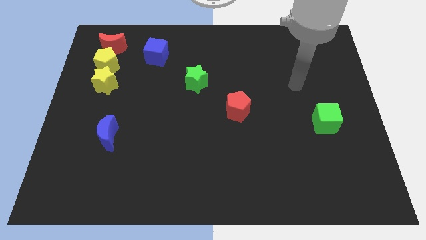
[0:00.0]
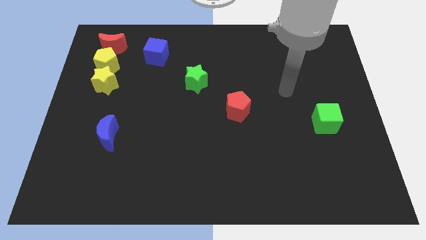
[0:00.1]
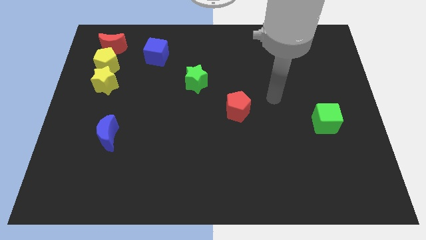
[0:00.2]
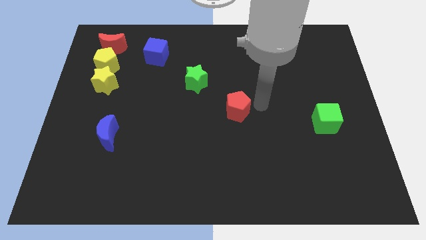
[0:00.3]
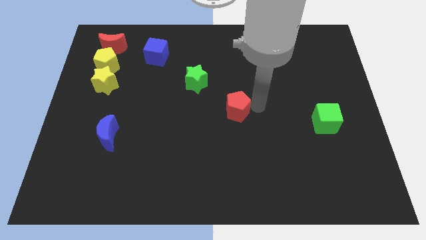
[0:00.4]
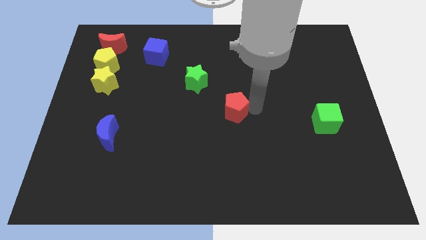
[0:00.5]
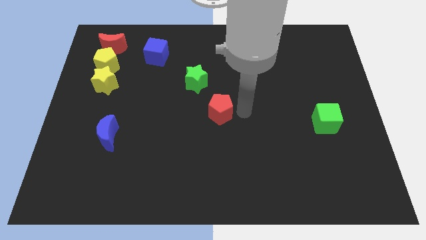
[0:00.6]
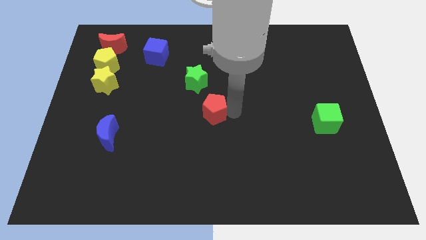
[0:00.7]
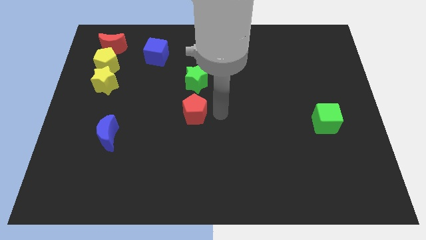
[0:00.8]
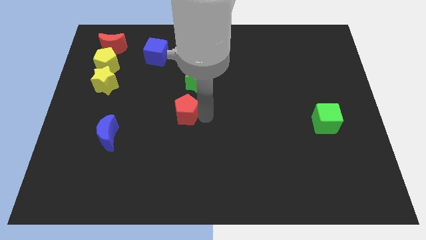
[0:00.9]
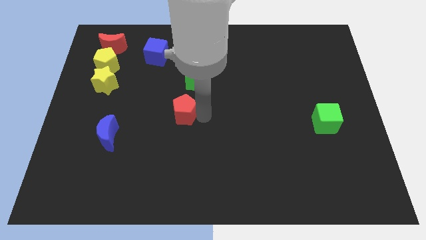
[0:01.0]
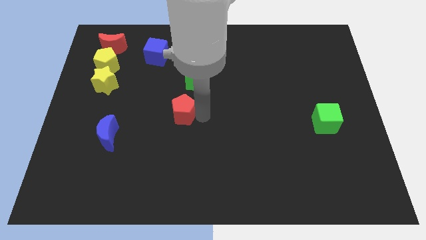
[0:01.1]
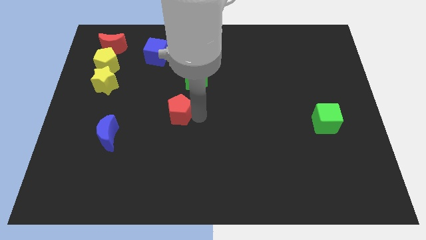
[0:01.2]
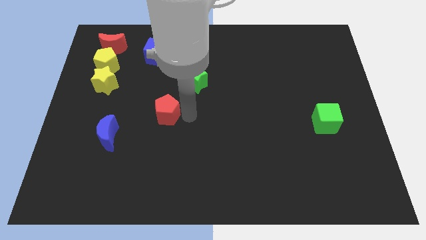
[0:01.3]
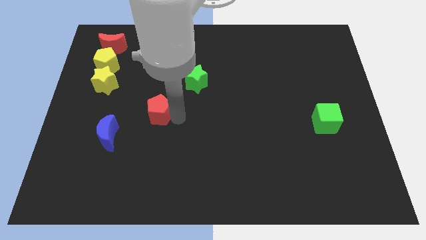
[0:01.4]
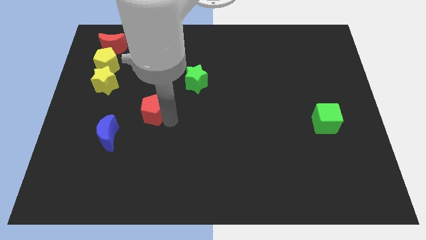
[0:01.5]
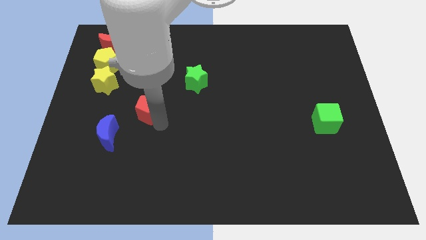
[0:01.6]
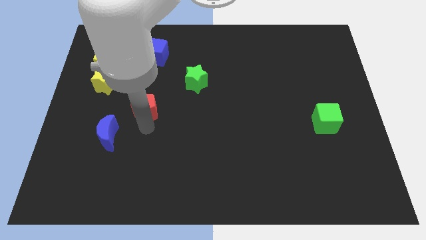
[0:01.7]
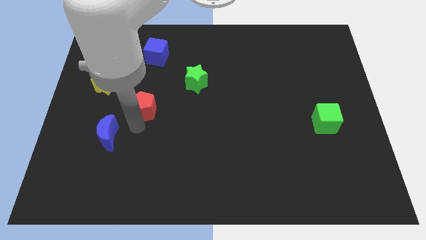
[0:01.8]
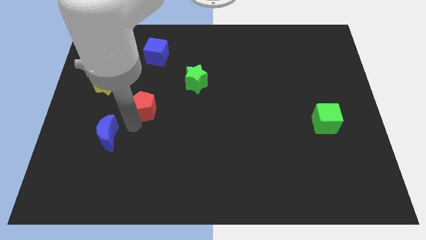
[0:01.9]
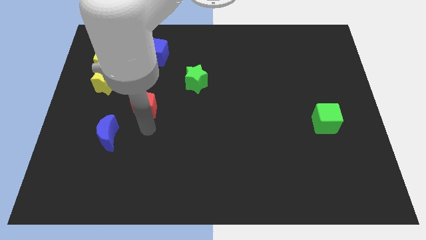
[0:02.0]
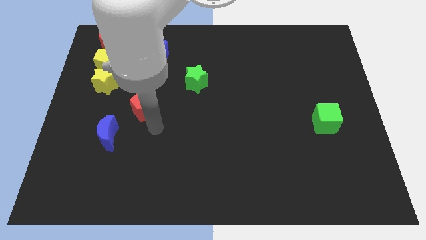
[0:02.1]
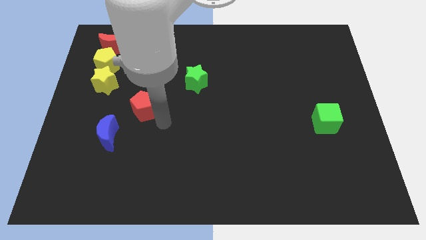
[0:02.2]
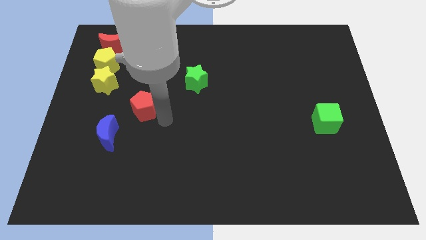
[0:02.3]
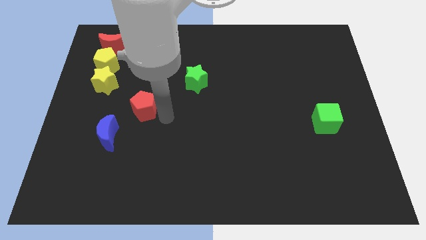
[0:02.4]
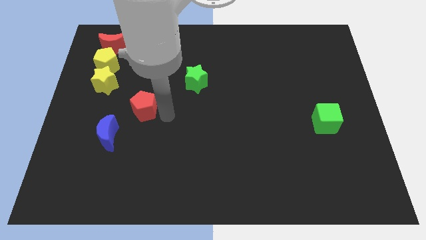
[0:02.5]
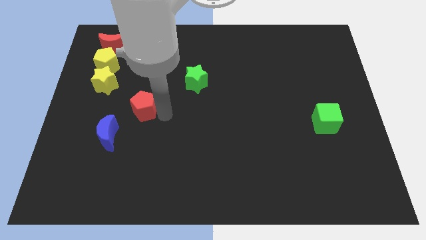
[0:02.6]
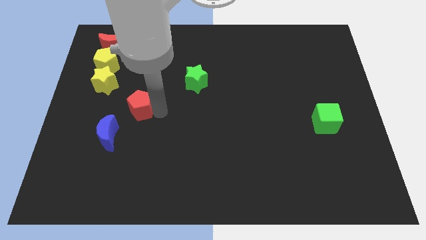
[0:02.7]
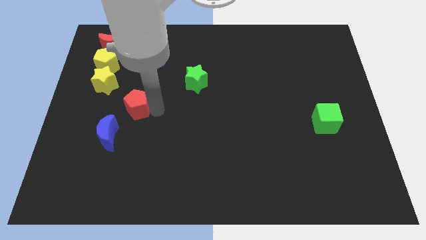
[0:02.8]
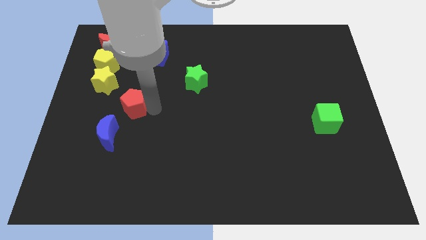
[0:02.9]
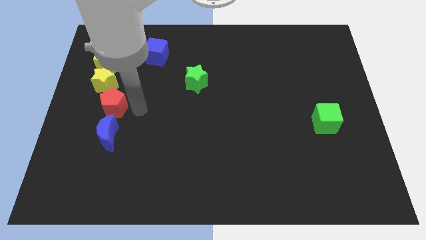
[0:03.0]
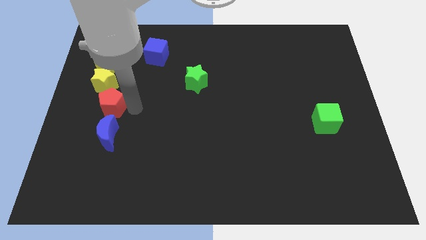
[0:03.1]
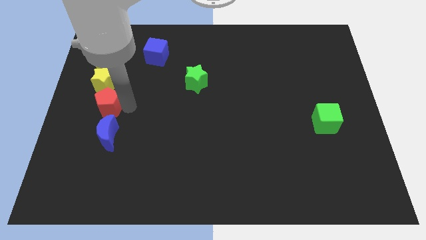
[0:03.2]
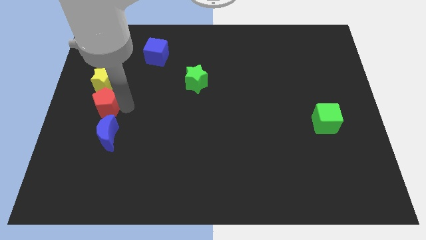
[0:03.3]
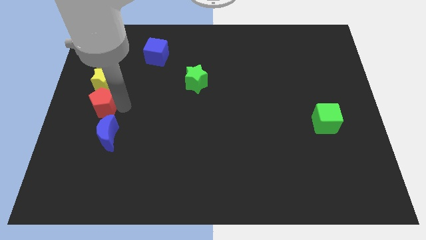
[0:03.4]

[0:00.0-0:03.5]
move the red pentagon below yellow star

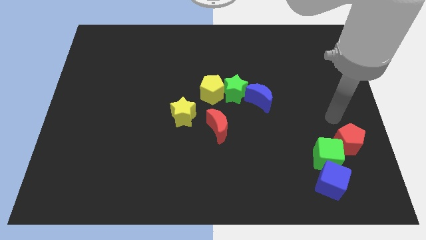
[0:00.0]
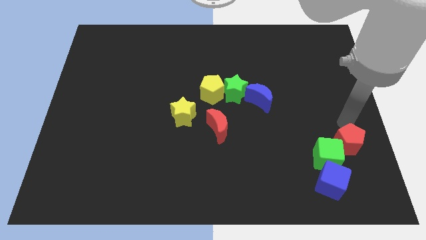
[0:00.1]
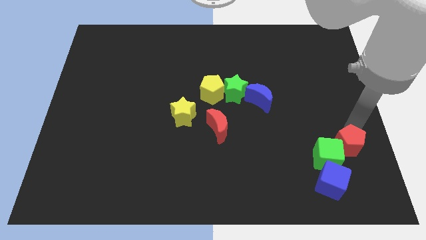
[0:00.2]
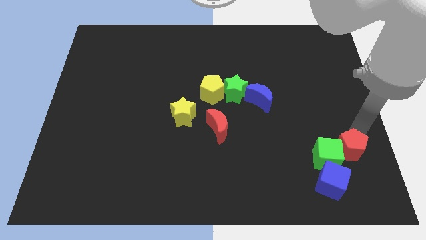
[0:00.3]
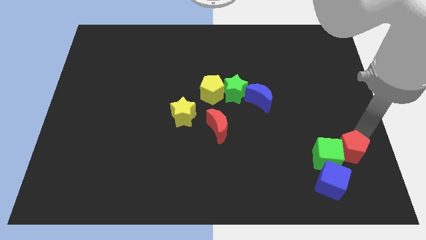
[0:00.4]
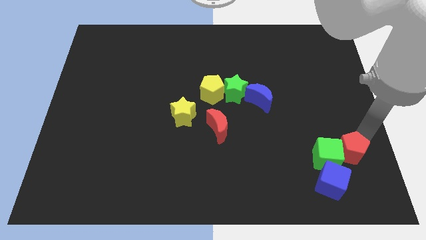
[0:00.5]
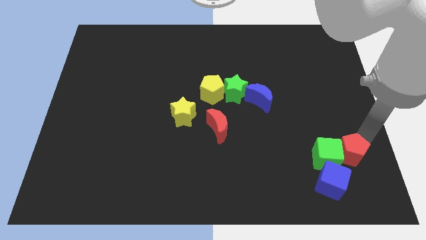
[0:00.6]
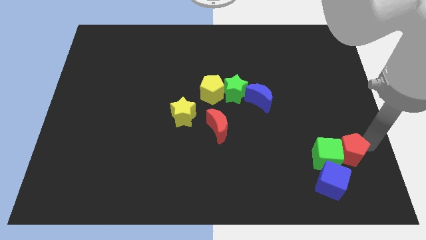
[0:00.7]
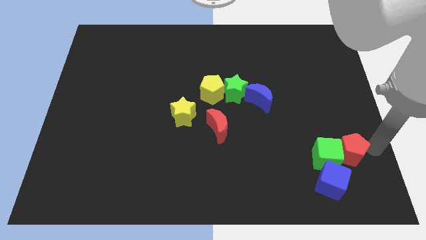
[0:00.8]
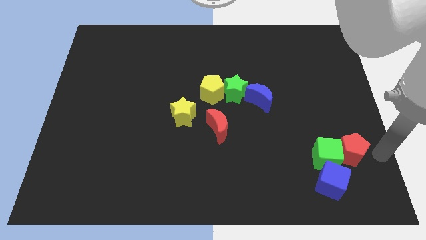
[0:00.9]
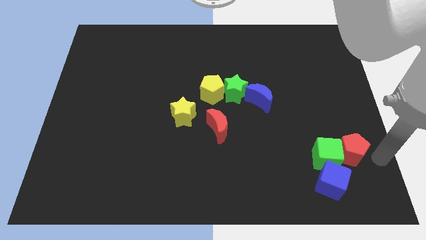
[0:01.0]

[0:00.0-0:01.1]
move the red pentagon to the right of the green cube

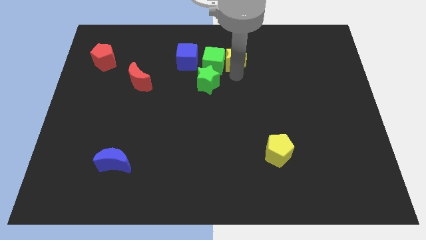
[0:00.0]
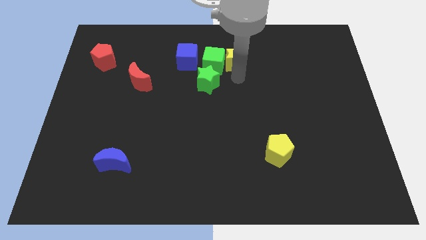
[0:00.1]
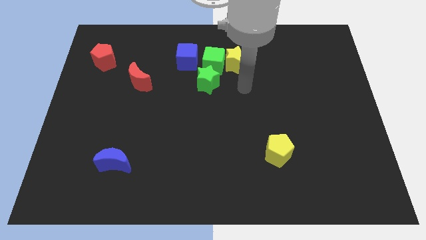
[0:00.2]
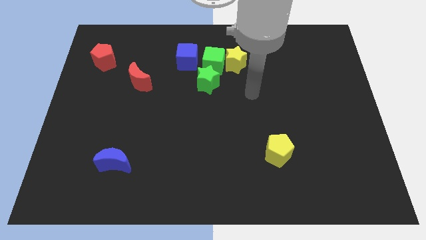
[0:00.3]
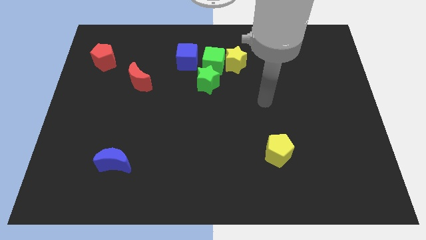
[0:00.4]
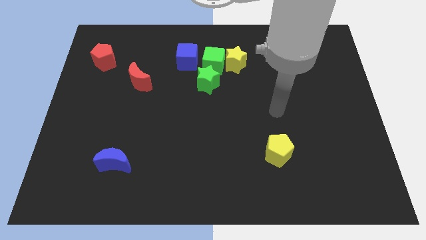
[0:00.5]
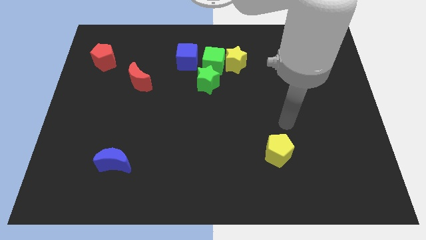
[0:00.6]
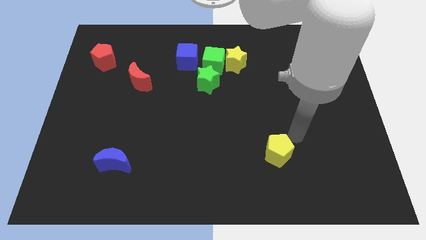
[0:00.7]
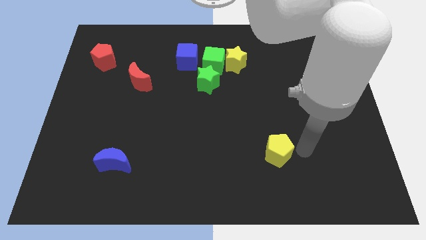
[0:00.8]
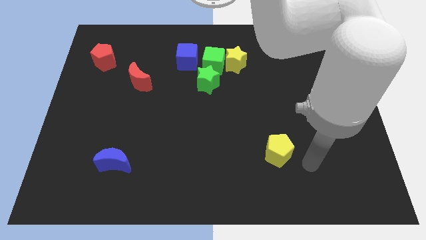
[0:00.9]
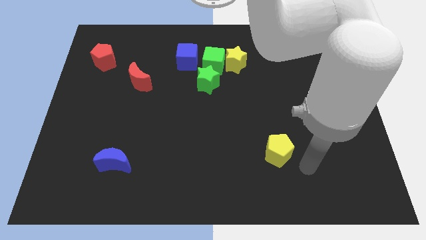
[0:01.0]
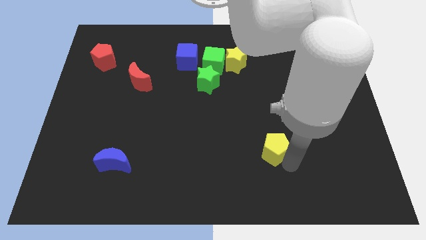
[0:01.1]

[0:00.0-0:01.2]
move your arm towards the bottom side of the board

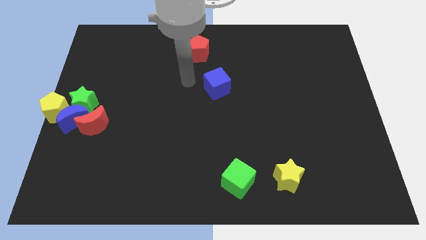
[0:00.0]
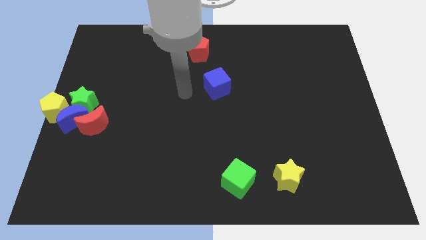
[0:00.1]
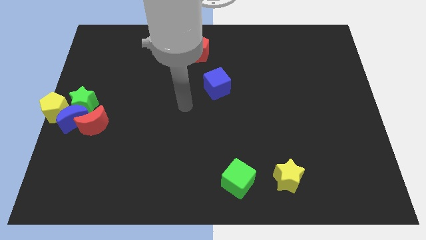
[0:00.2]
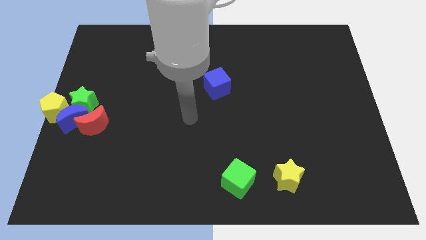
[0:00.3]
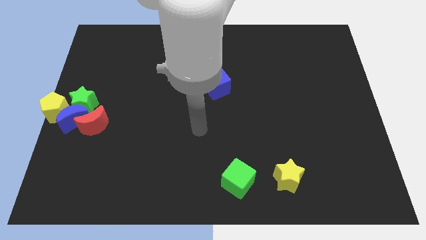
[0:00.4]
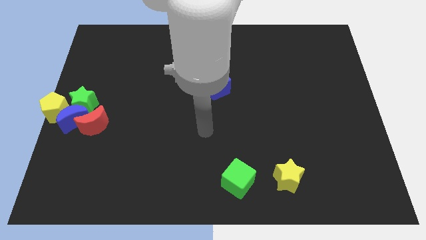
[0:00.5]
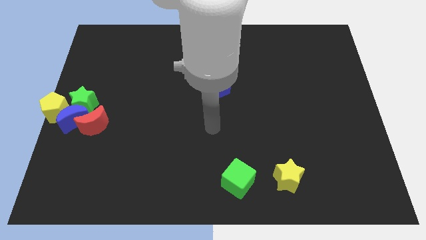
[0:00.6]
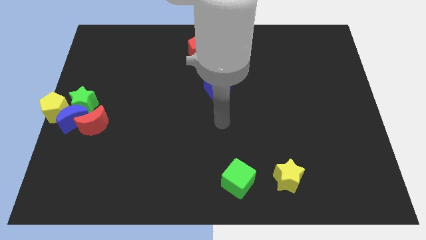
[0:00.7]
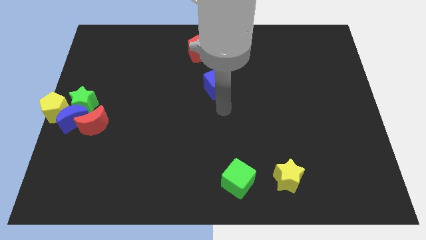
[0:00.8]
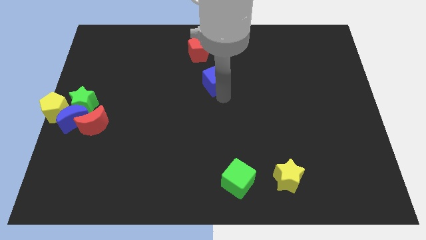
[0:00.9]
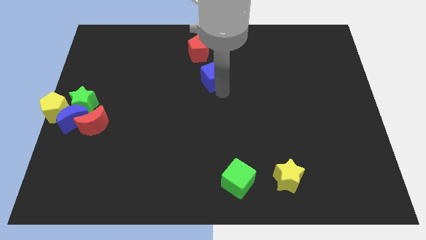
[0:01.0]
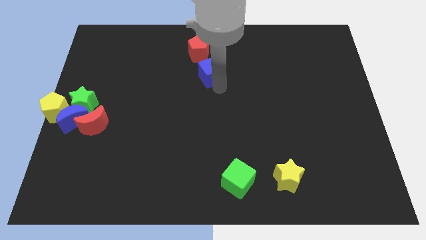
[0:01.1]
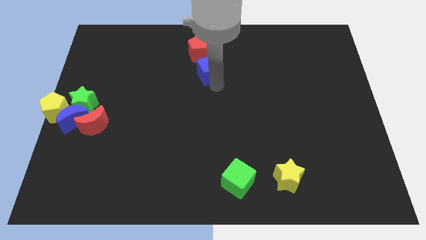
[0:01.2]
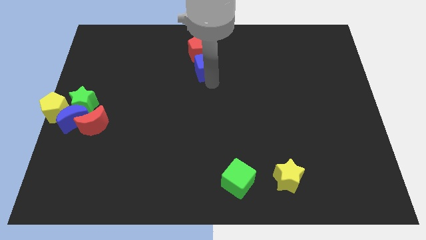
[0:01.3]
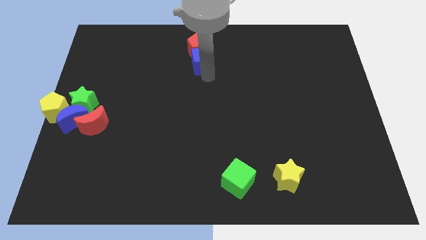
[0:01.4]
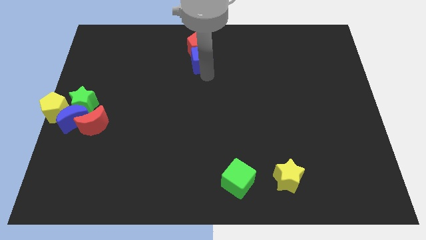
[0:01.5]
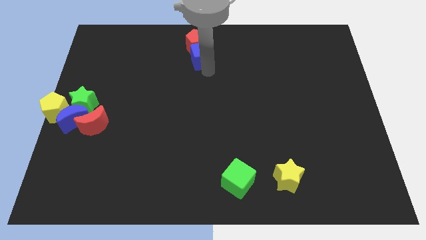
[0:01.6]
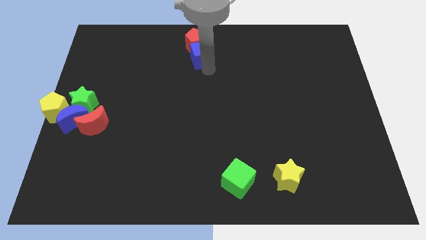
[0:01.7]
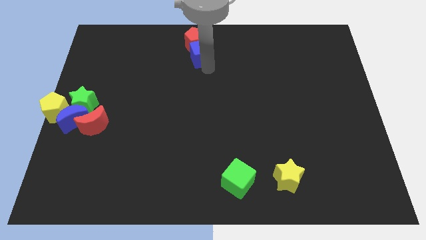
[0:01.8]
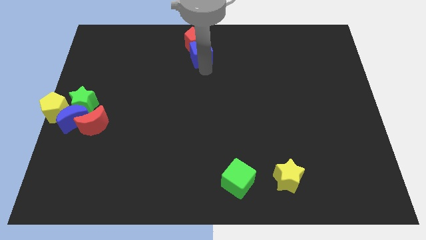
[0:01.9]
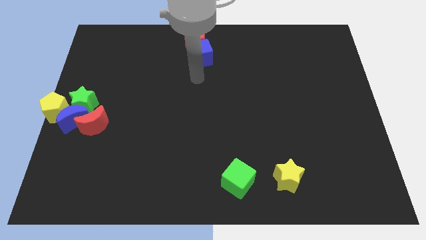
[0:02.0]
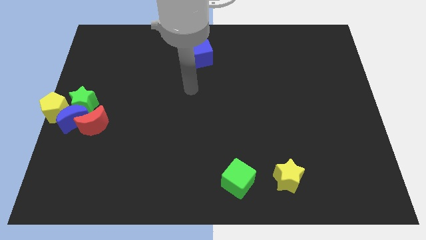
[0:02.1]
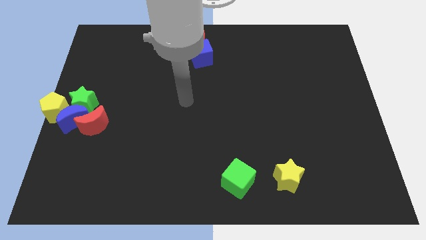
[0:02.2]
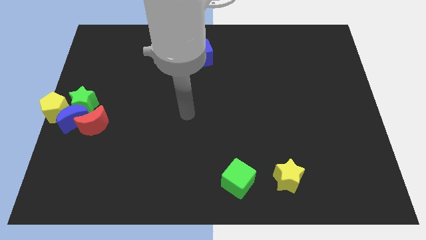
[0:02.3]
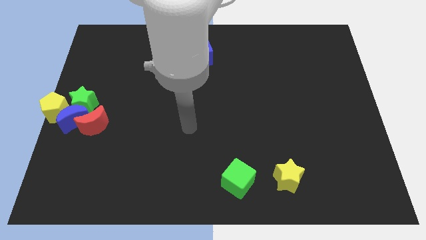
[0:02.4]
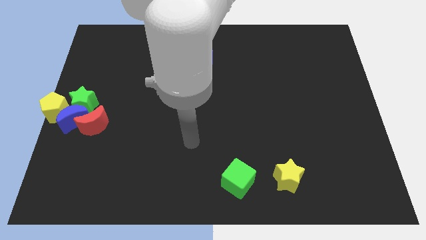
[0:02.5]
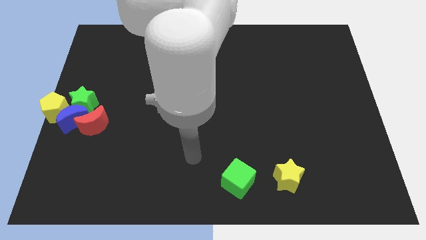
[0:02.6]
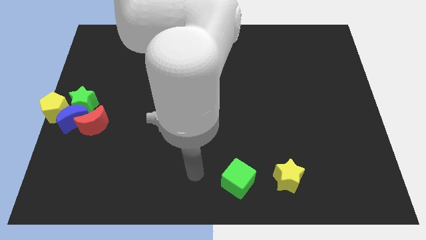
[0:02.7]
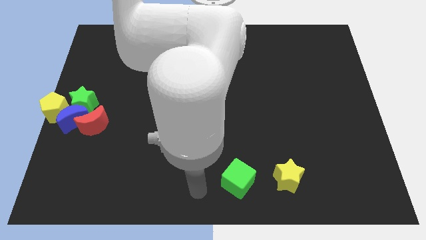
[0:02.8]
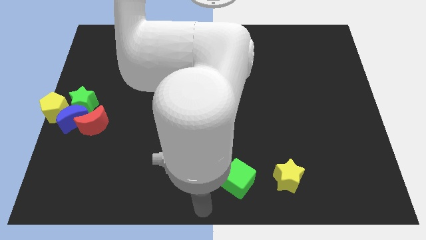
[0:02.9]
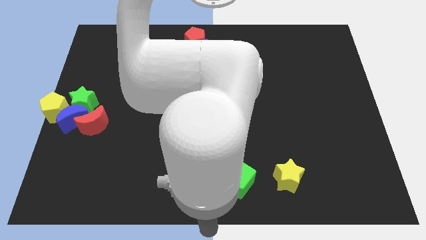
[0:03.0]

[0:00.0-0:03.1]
push blue cube into red pentagon

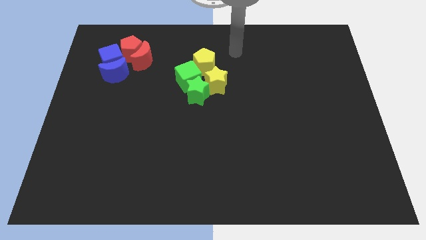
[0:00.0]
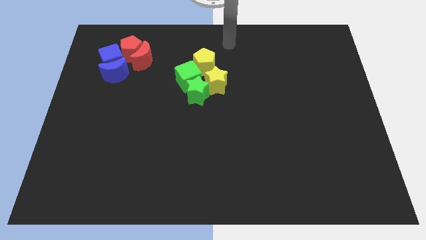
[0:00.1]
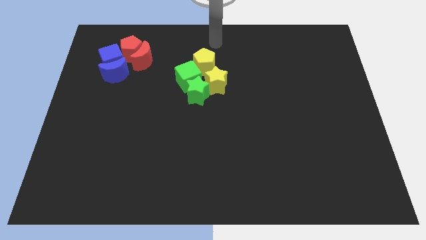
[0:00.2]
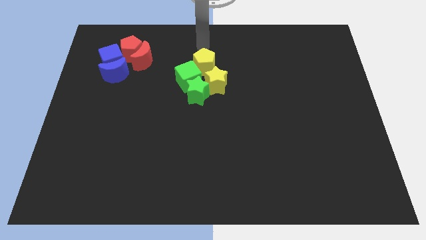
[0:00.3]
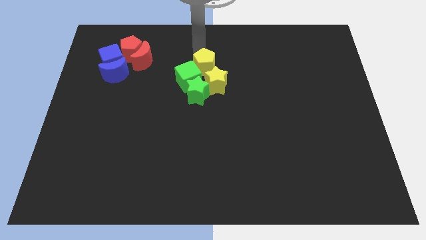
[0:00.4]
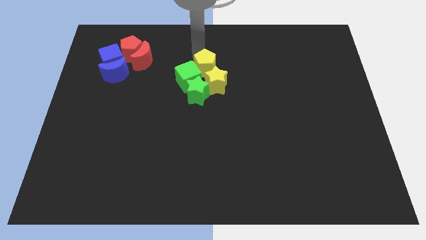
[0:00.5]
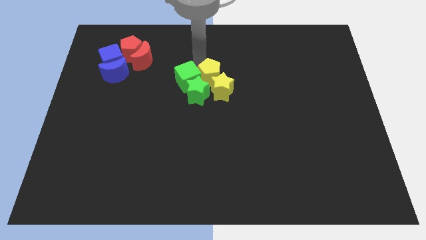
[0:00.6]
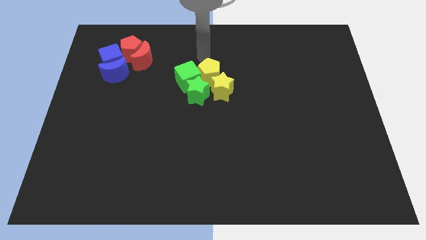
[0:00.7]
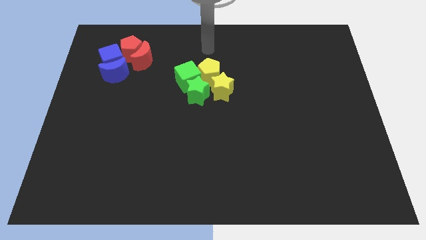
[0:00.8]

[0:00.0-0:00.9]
push yellow pentagon and yellow star slightly downwards
